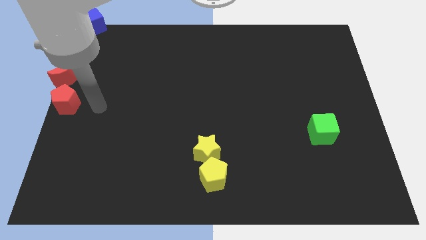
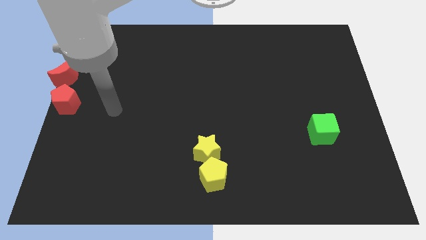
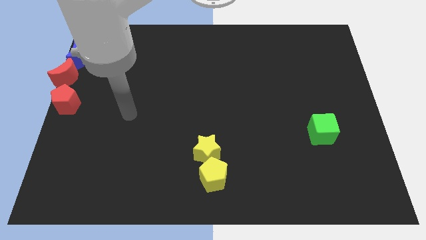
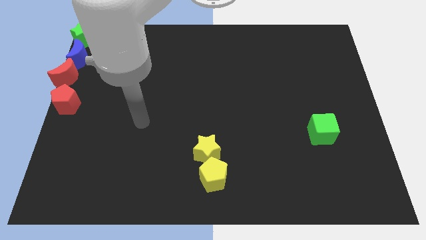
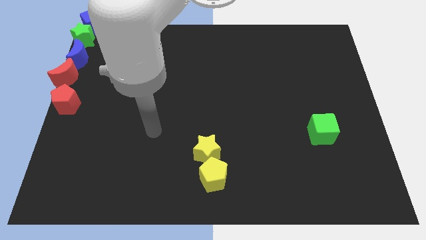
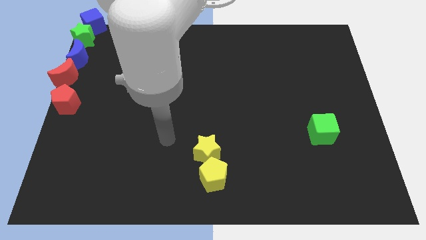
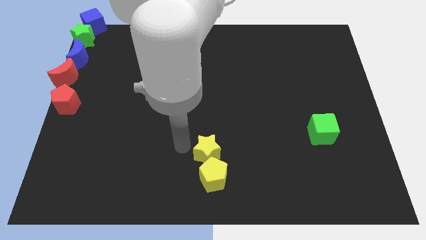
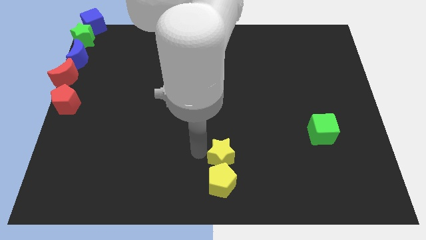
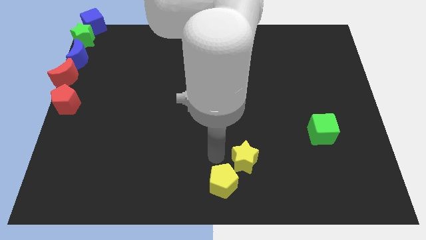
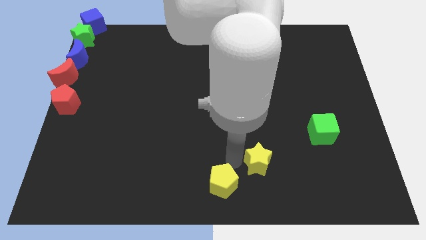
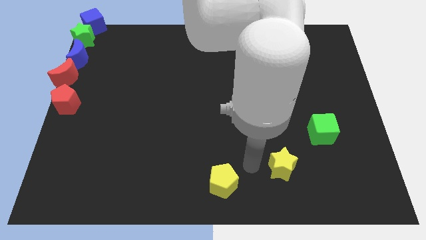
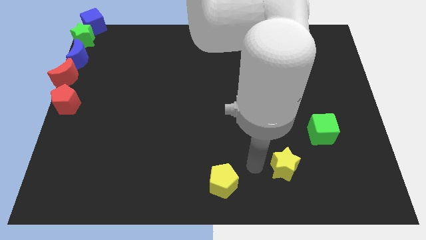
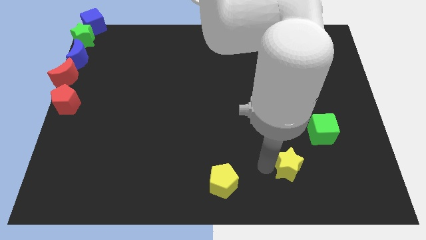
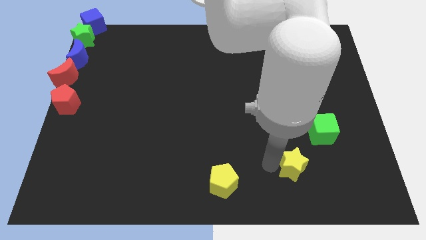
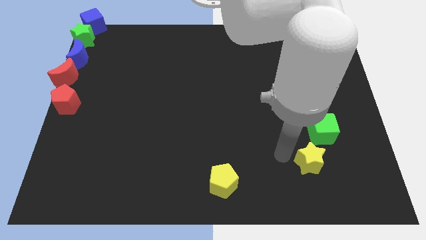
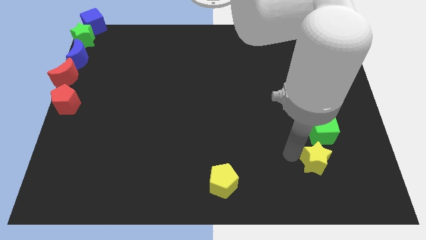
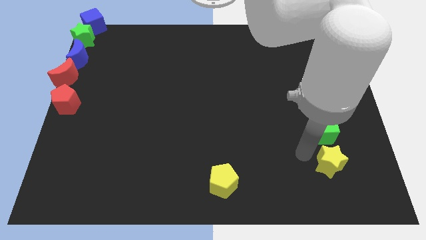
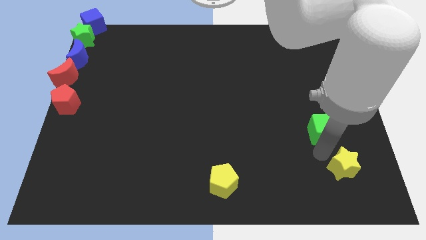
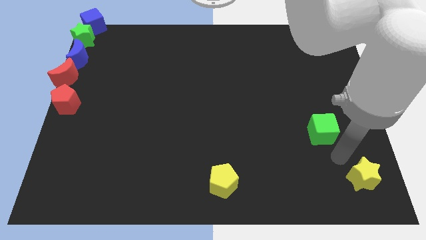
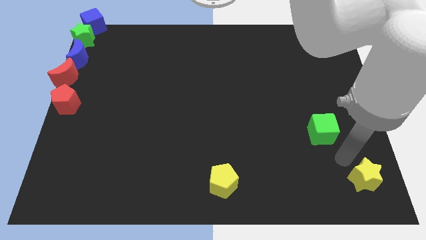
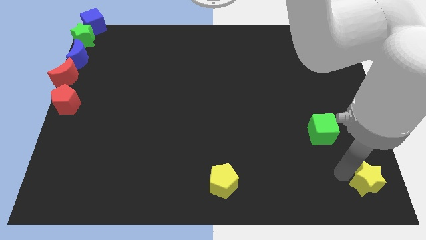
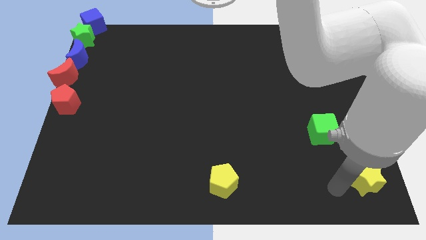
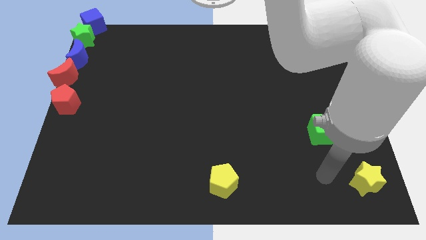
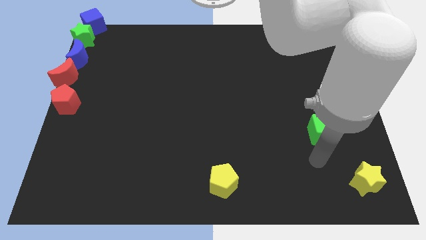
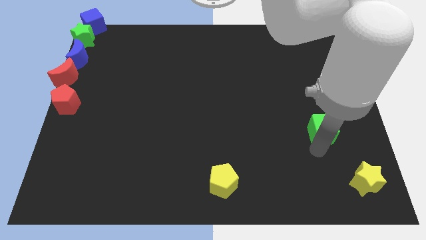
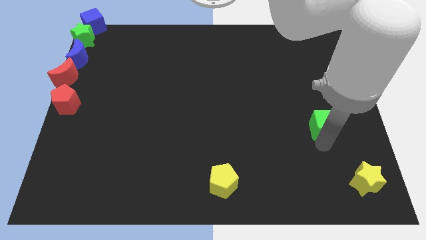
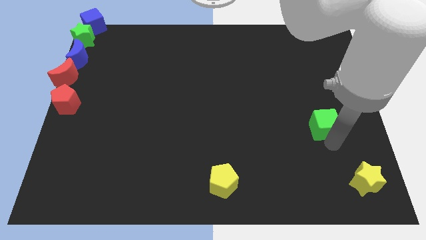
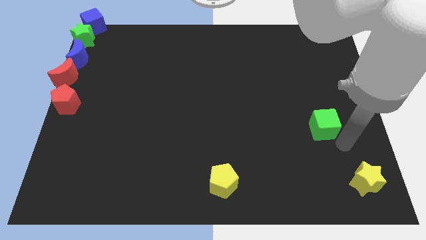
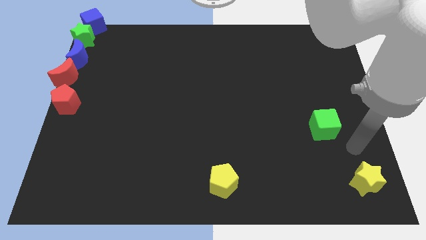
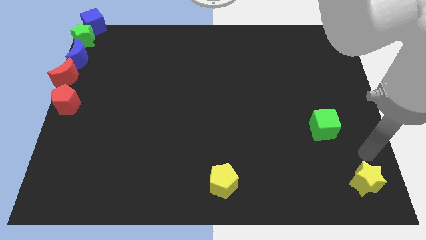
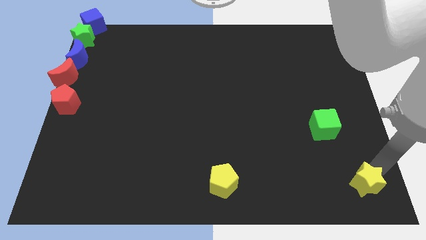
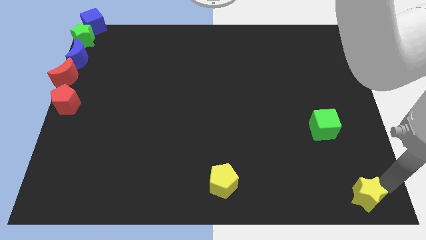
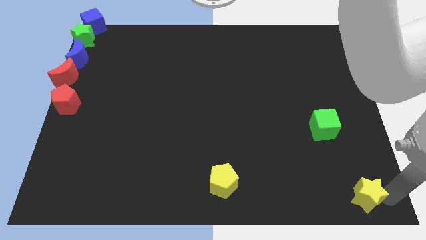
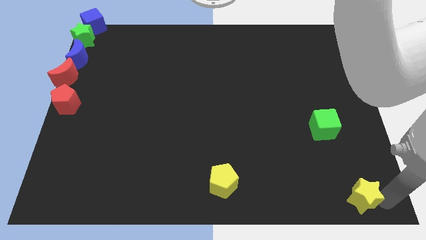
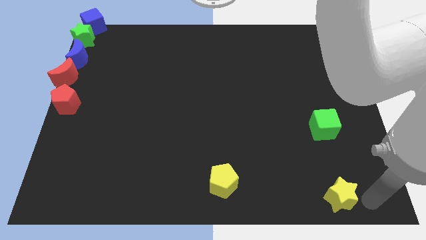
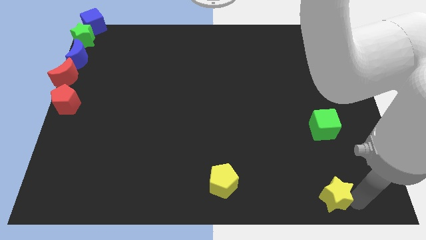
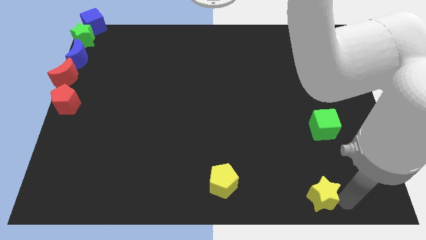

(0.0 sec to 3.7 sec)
place the yellow star vertically under the green cube

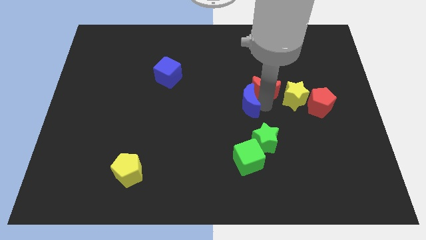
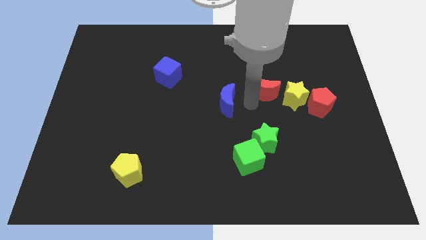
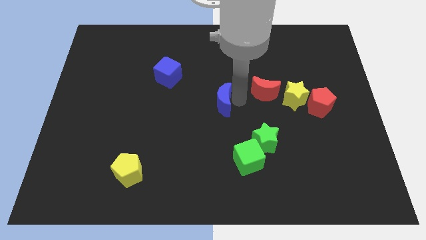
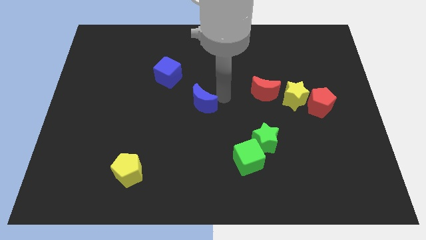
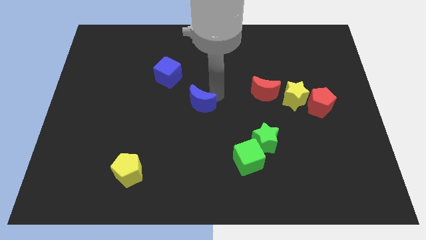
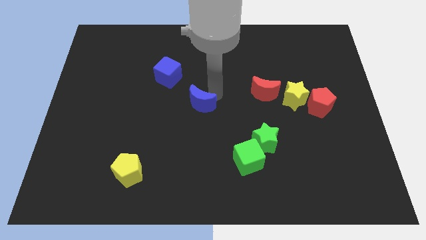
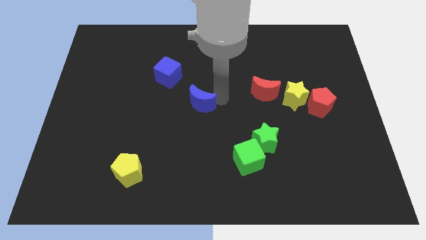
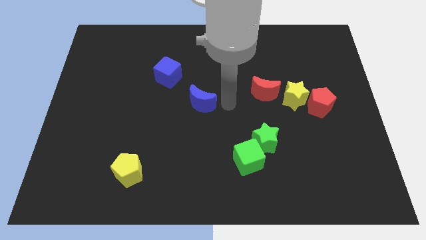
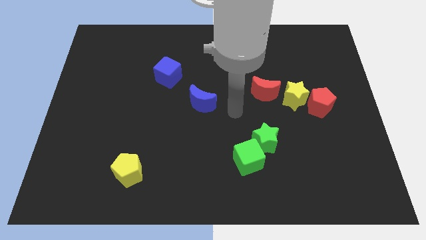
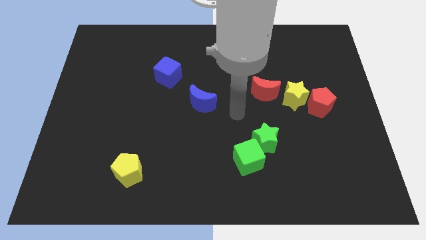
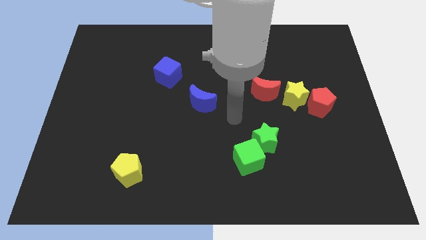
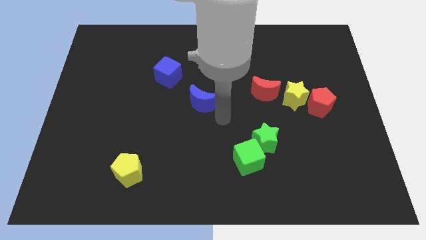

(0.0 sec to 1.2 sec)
separate the blue crescent from red crescent

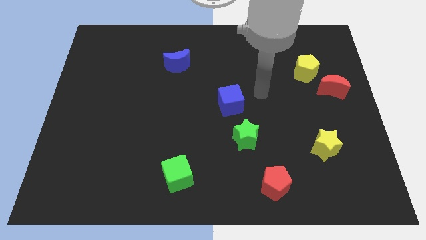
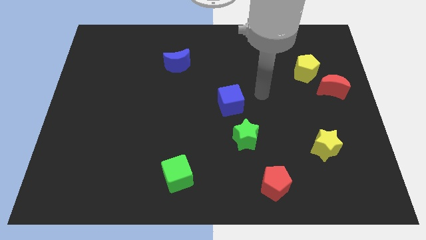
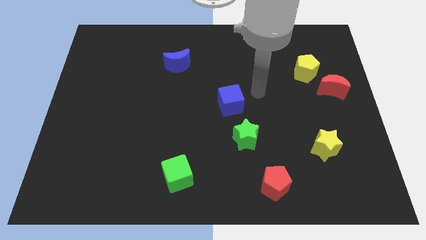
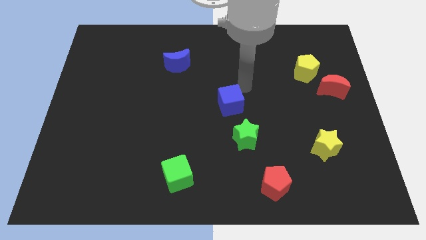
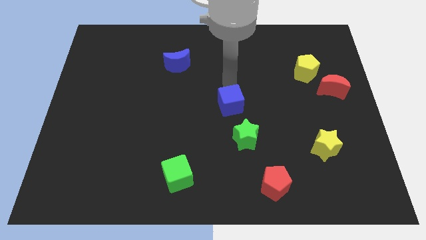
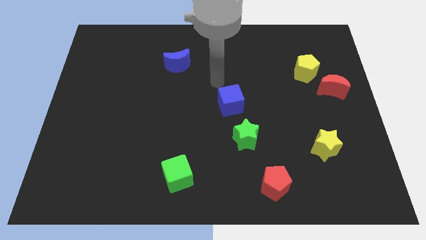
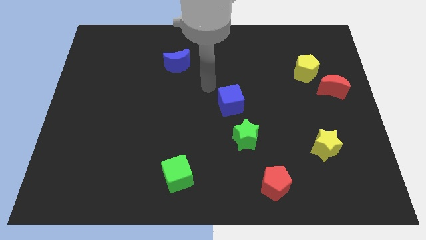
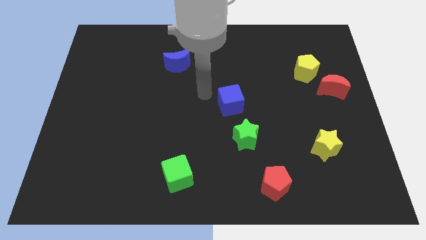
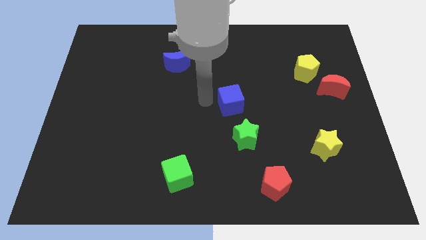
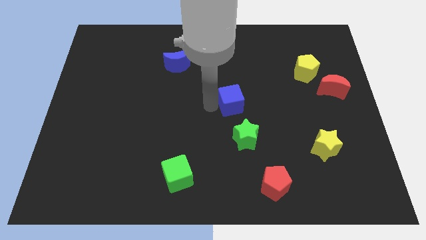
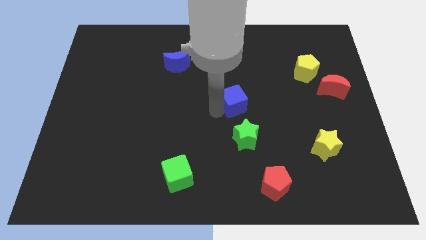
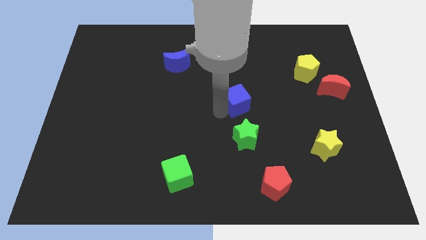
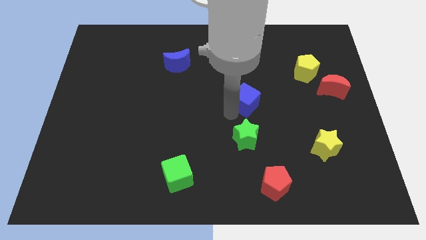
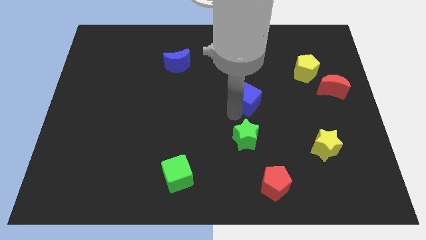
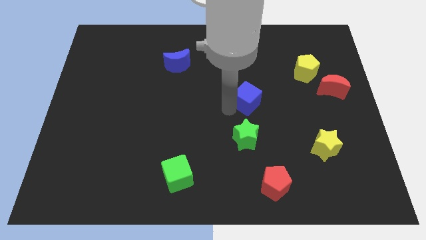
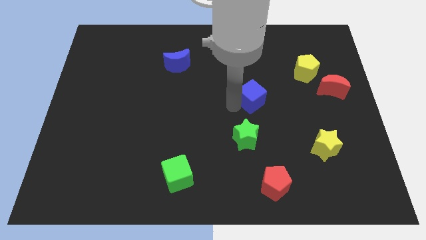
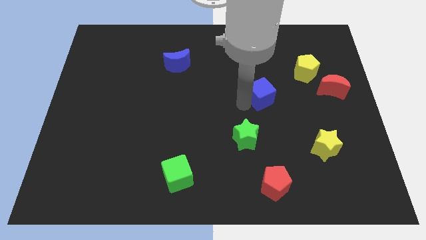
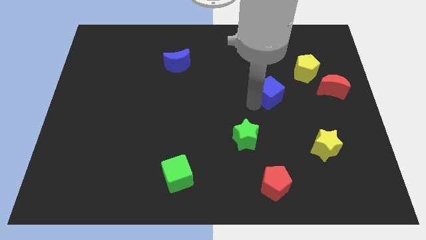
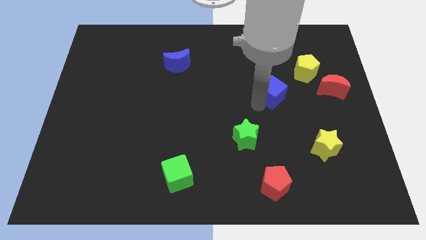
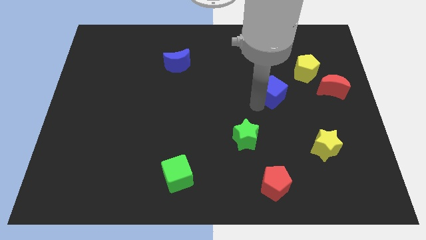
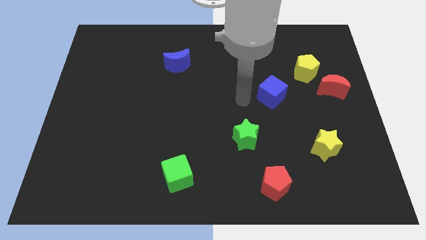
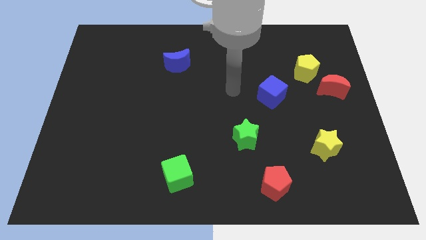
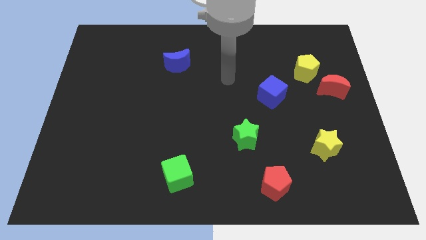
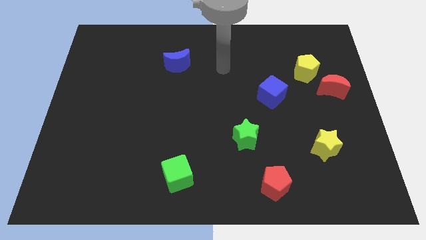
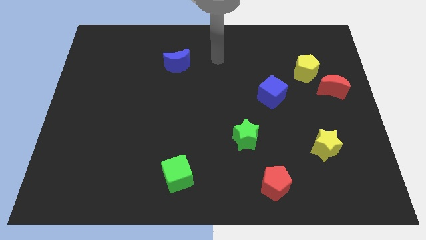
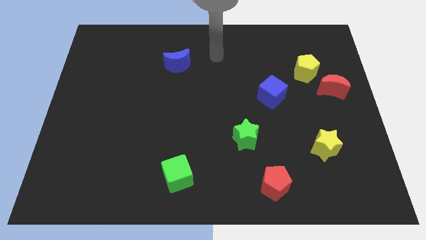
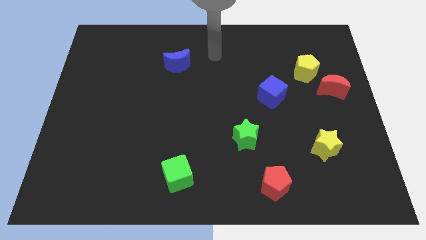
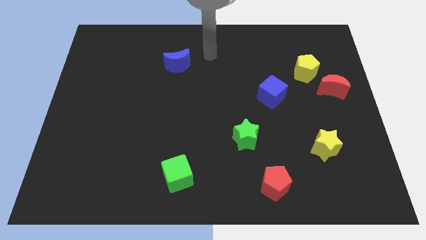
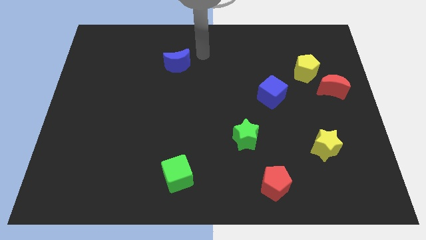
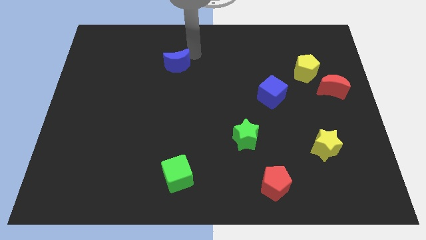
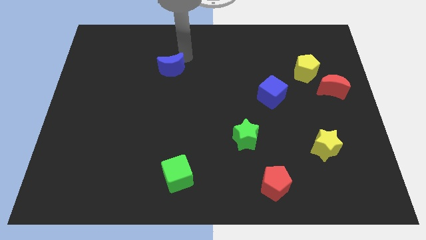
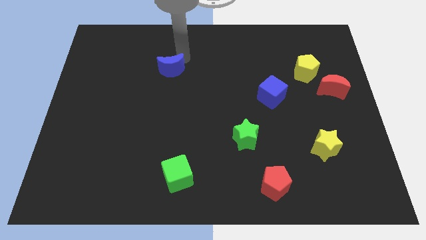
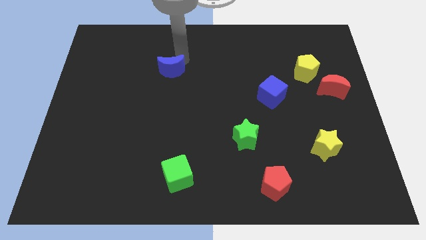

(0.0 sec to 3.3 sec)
move the blue cube in between the yellow pentagon and green star

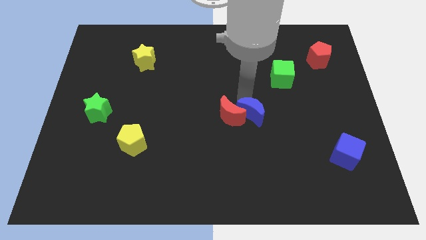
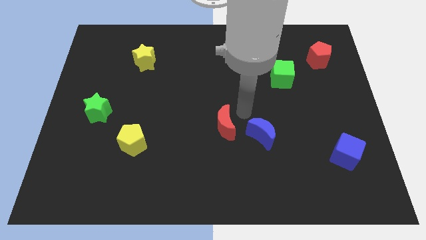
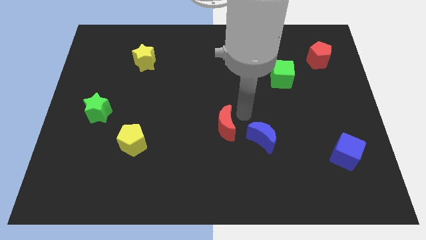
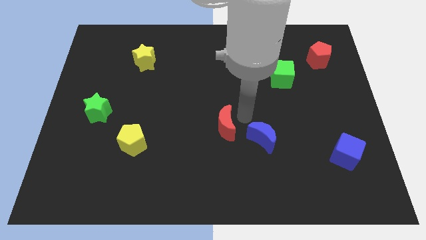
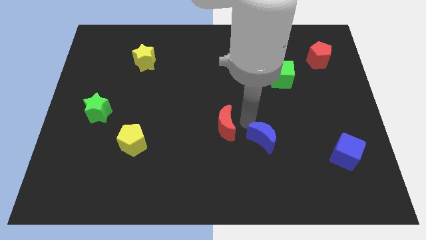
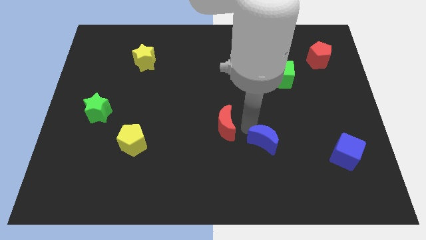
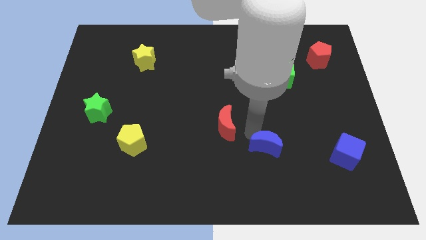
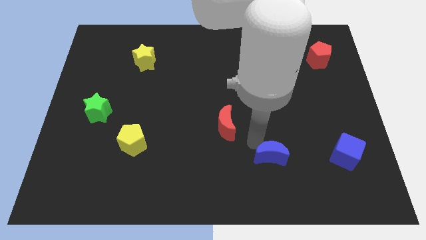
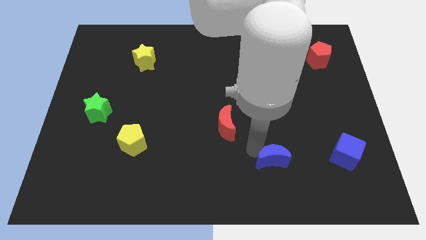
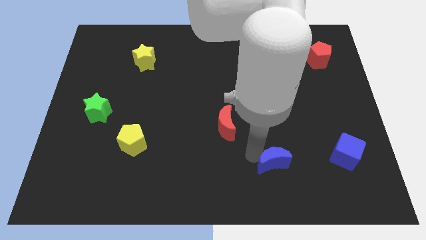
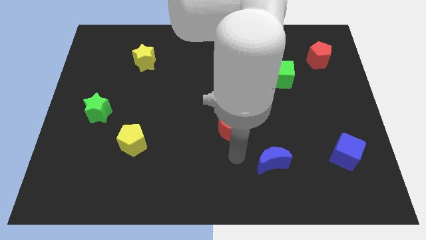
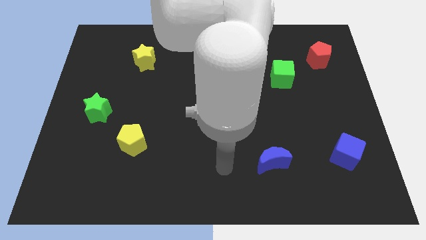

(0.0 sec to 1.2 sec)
push the blue crescent horizontally to the left of the blue cube
